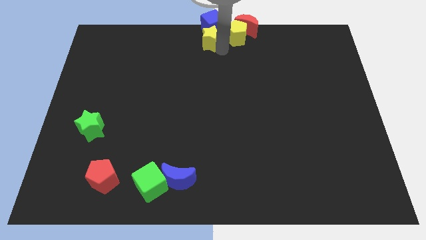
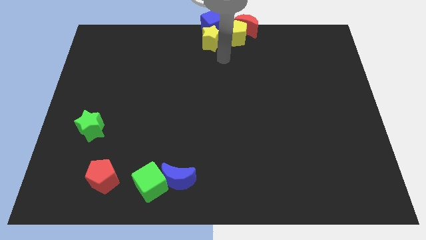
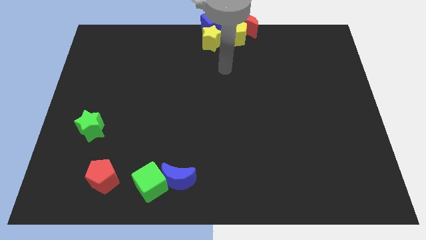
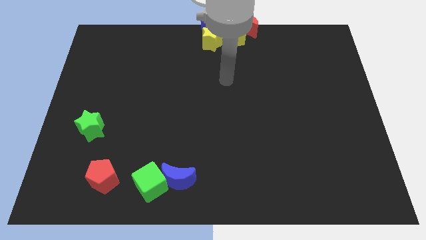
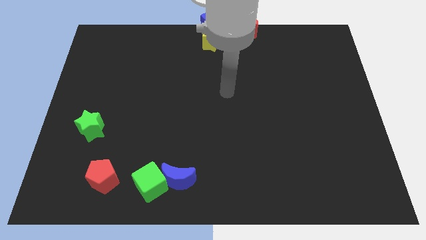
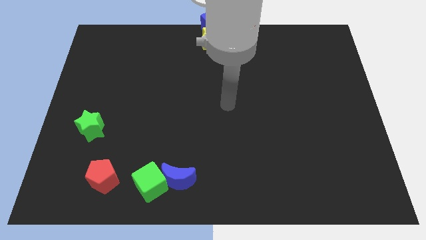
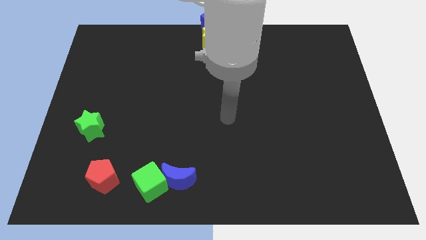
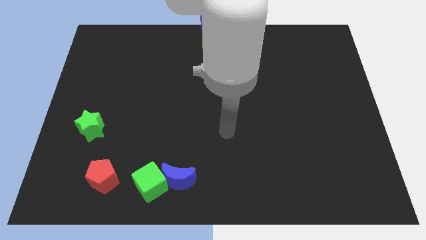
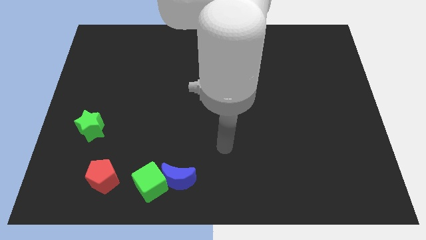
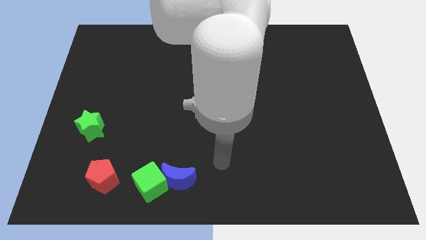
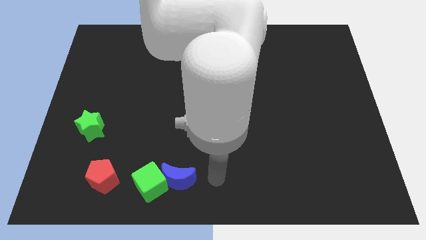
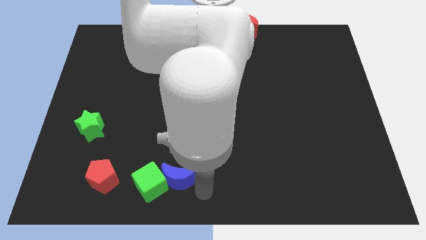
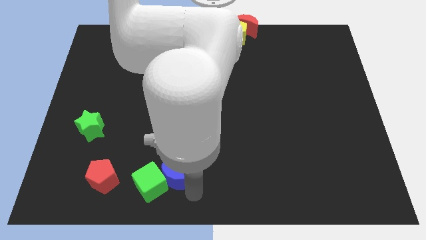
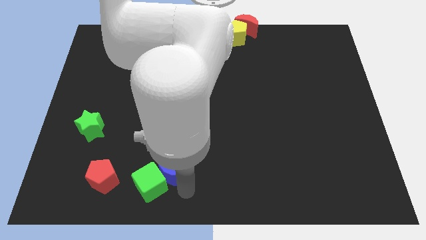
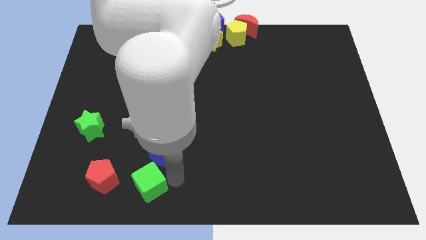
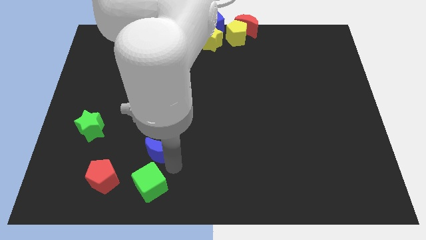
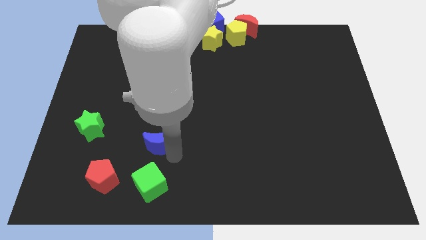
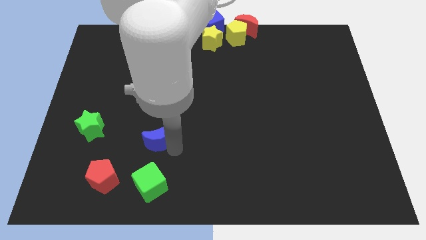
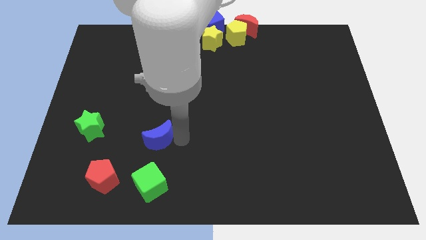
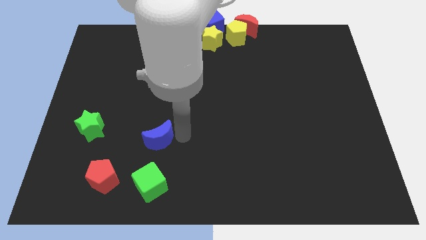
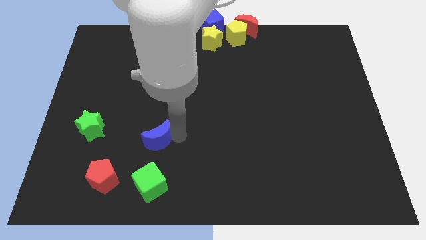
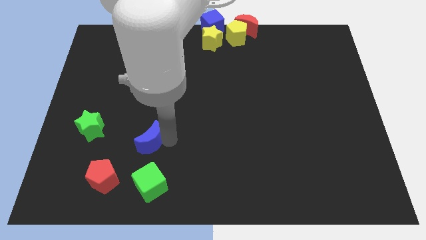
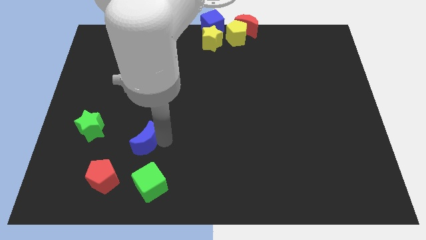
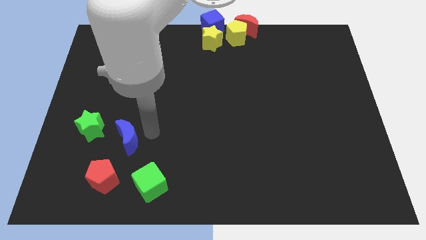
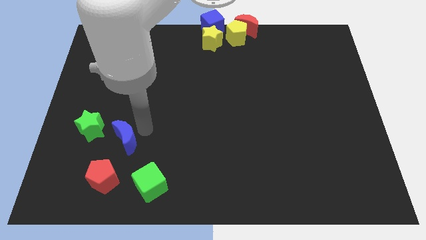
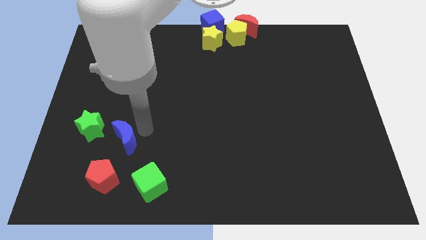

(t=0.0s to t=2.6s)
place the blue moon right to the green star

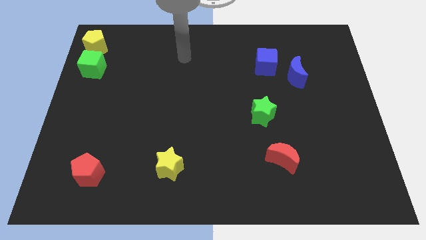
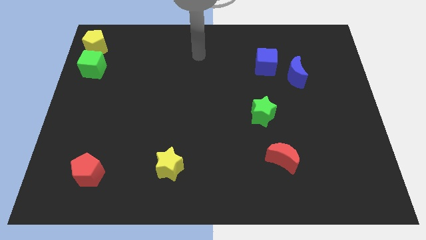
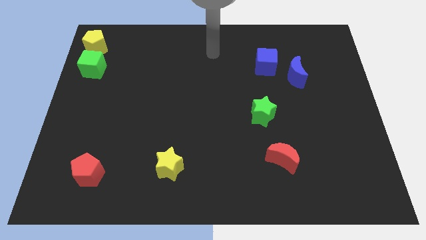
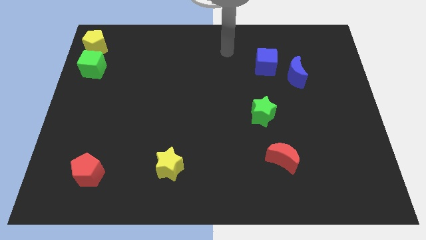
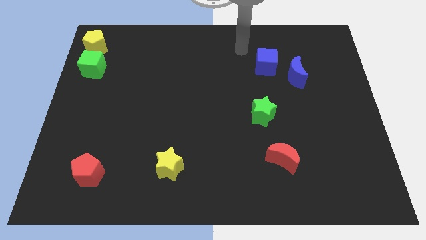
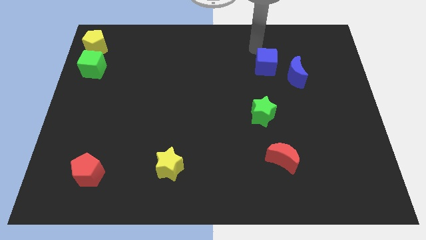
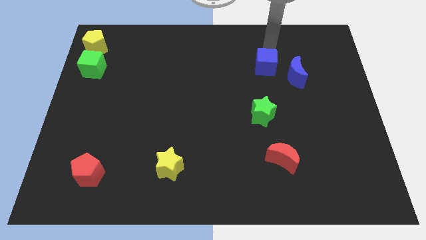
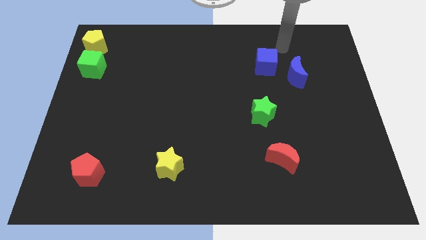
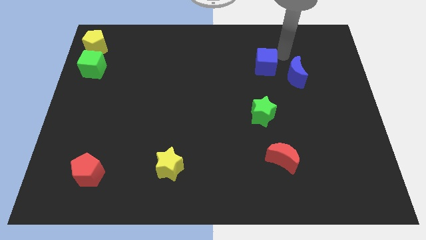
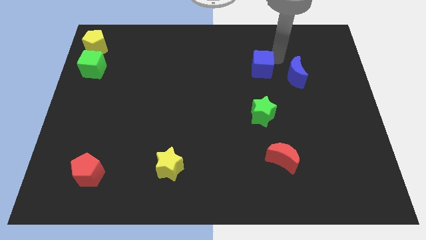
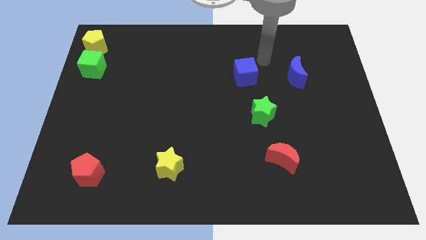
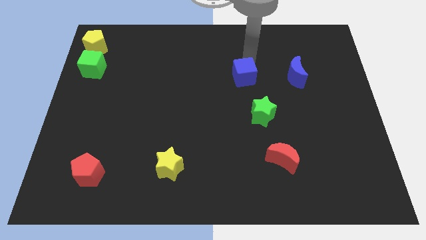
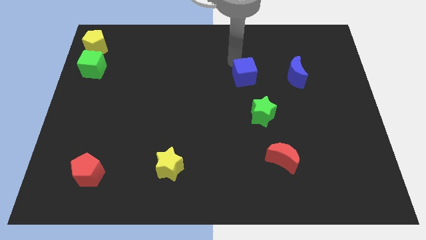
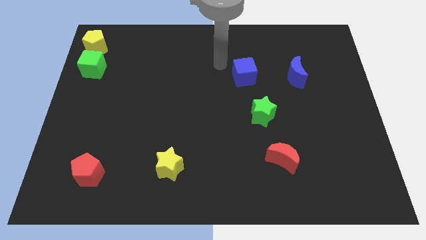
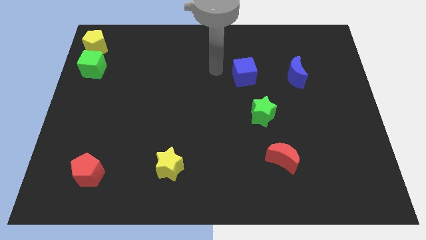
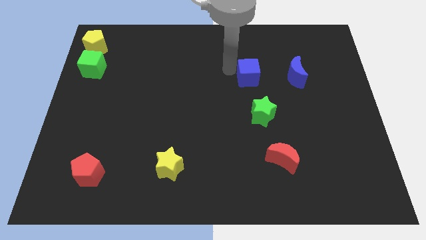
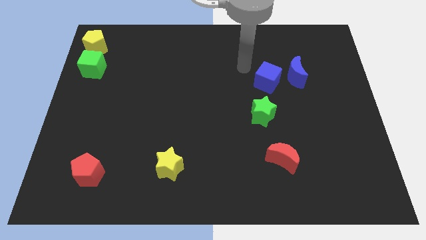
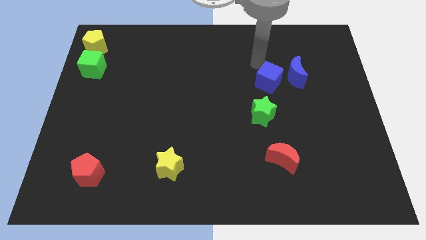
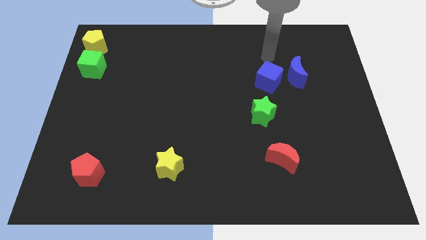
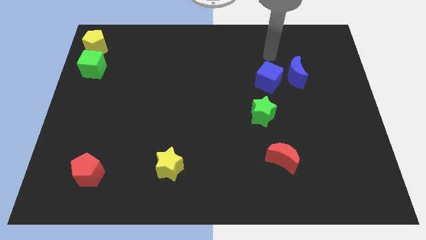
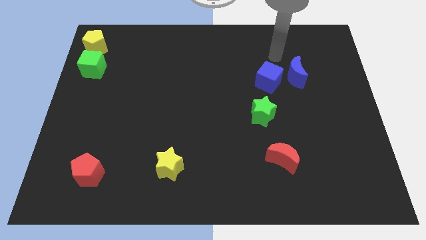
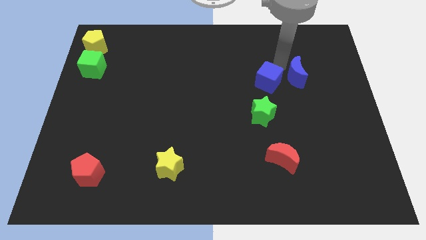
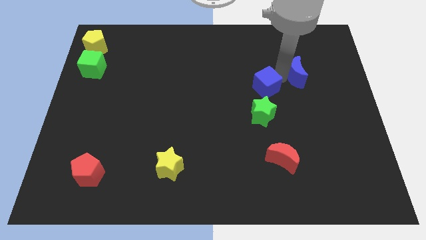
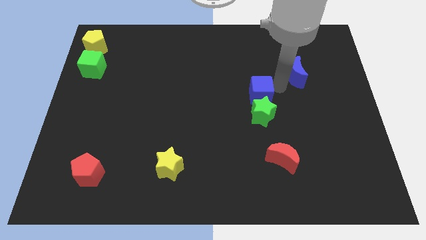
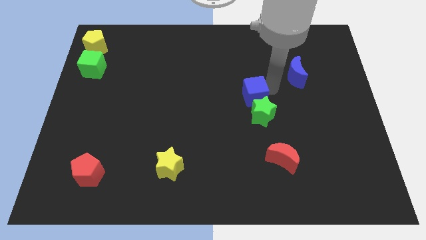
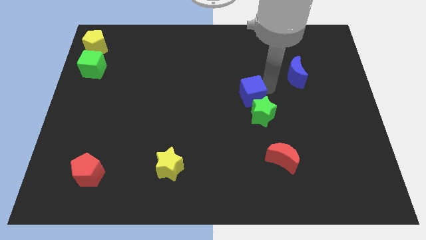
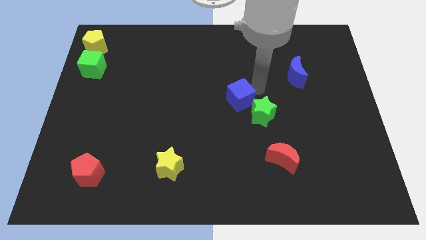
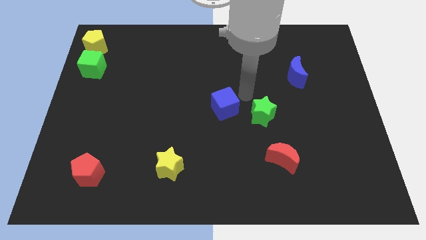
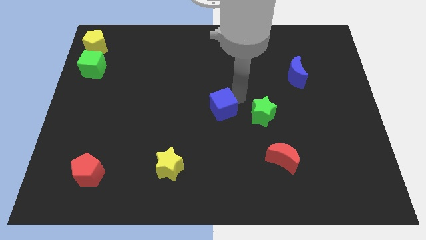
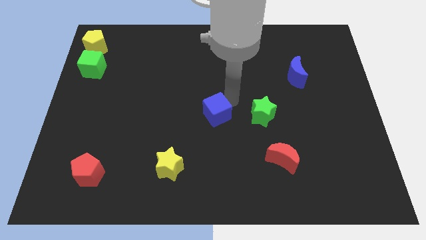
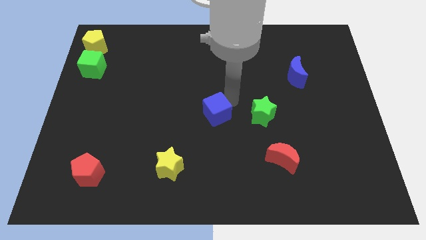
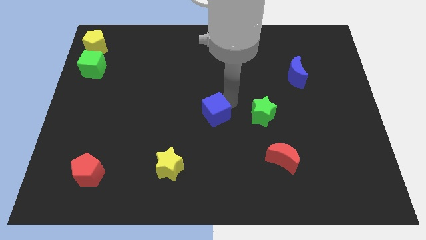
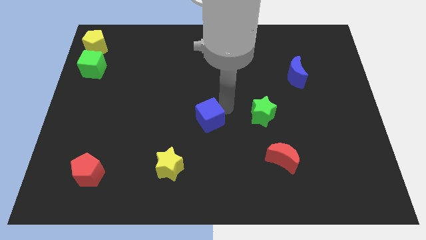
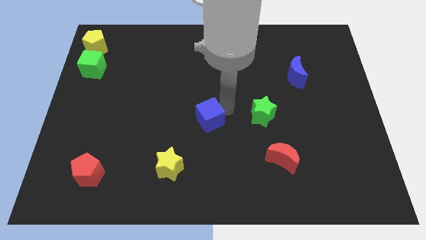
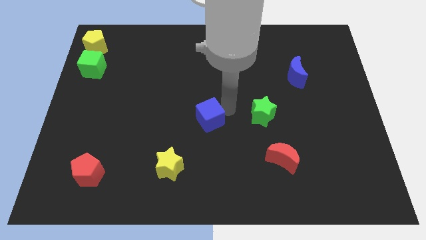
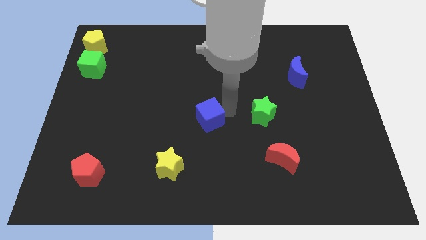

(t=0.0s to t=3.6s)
separate the blue cube away from the blue crescent

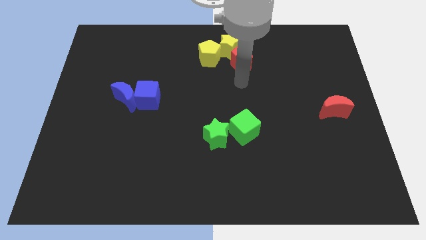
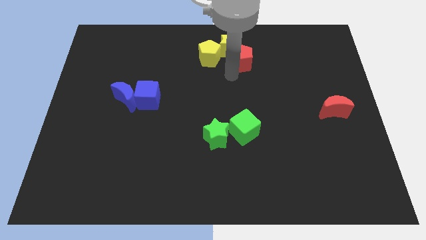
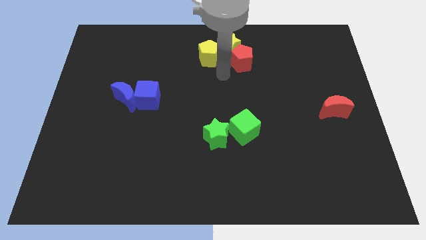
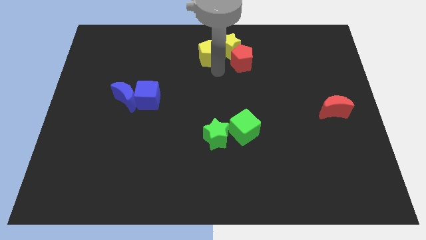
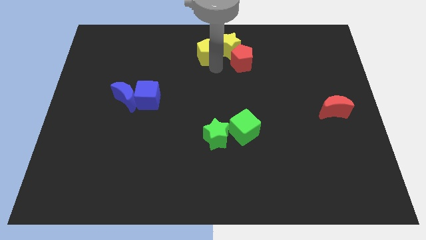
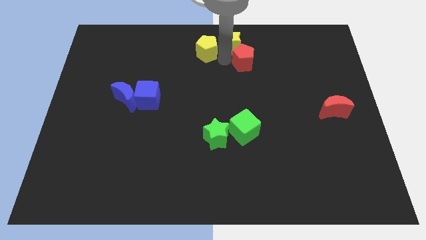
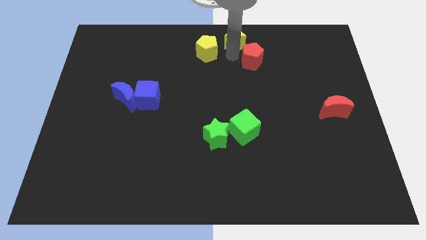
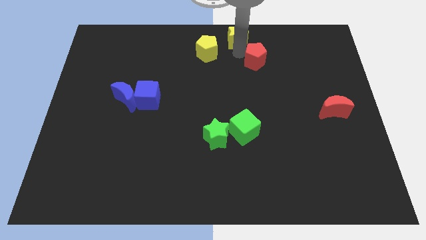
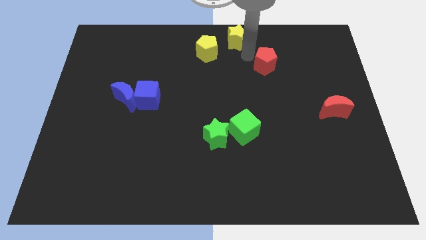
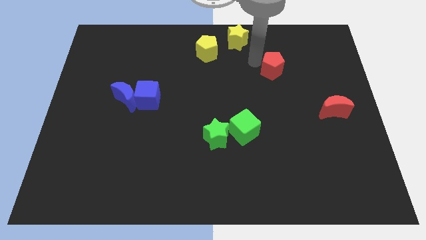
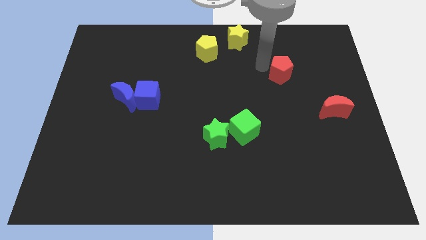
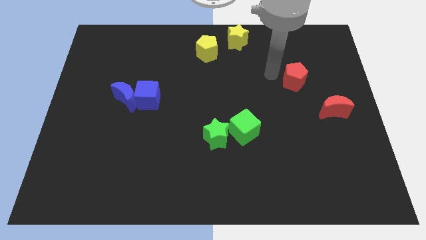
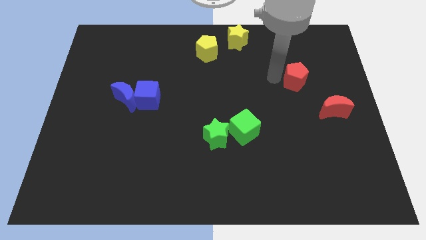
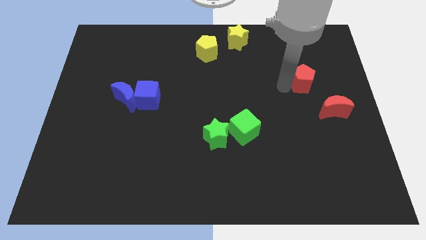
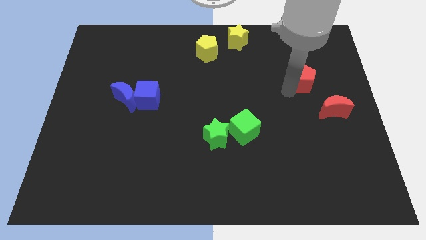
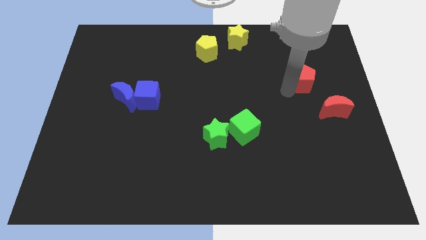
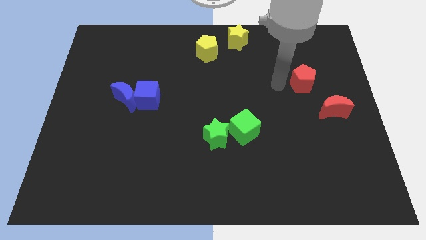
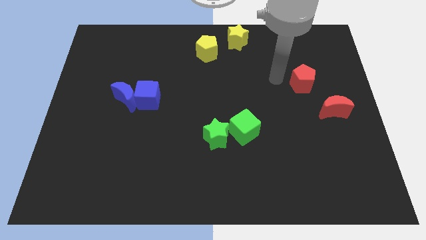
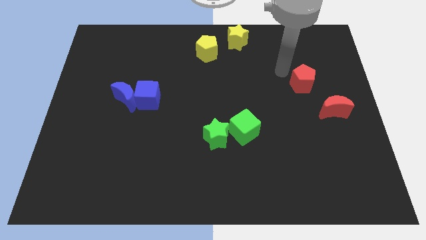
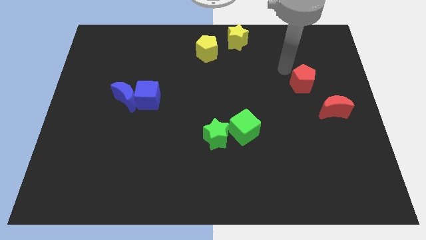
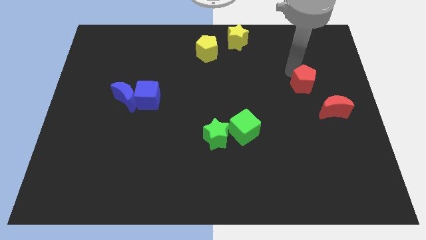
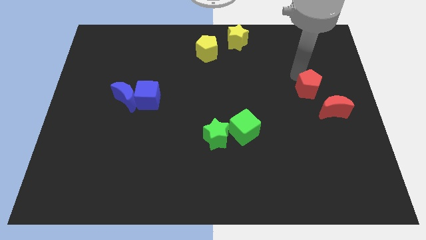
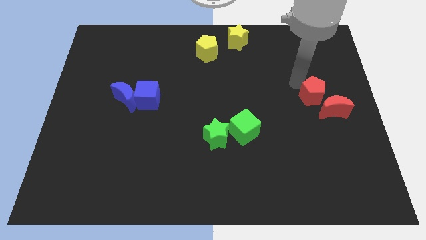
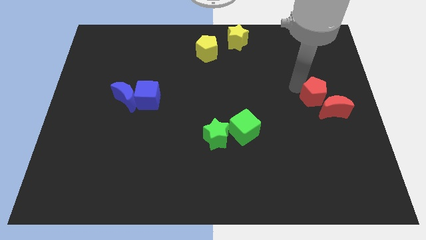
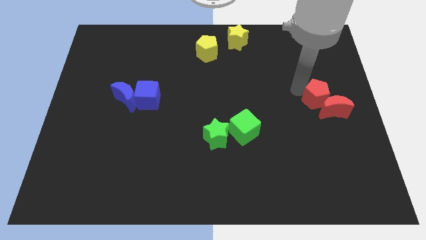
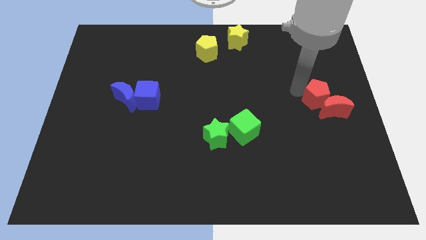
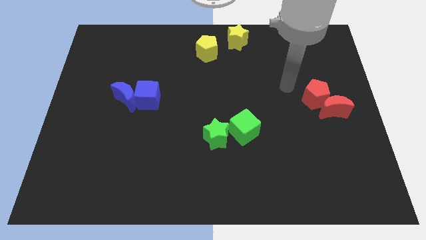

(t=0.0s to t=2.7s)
make the red pentagon touch the top left of the red crescent
